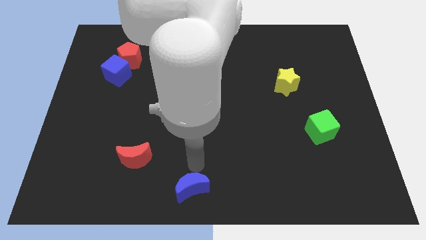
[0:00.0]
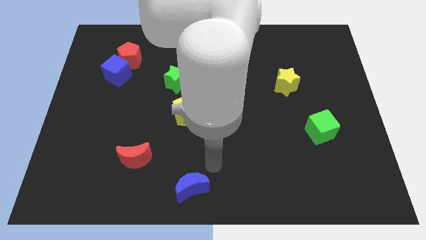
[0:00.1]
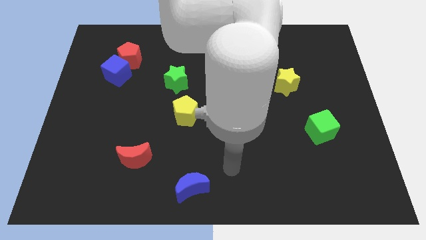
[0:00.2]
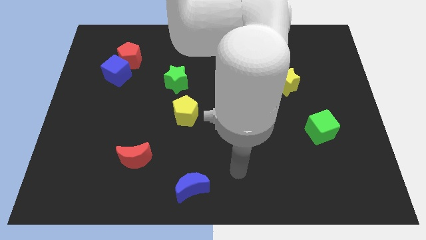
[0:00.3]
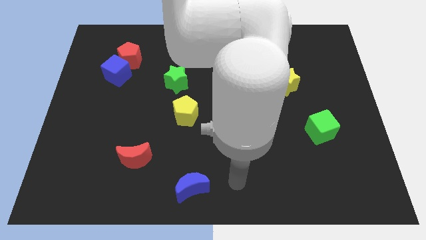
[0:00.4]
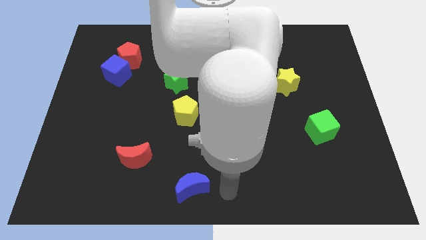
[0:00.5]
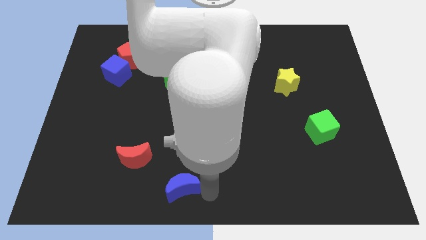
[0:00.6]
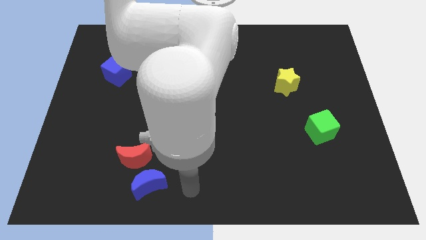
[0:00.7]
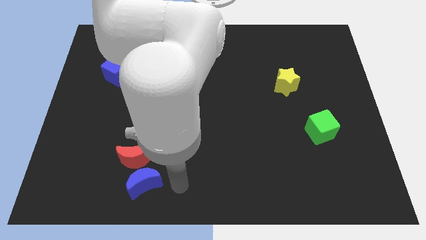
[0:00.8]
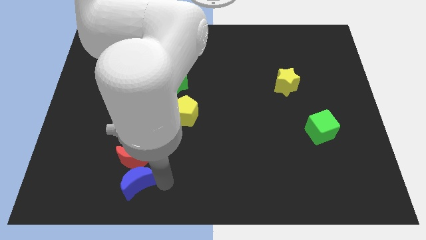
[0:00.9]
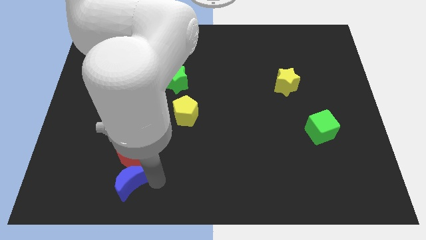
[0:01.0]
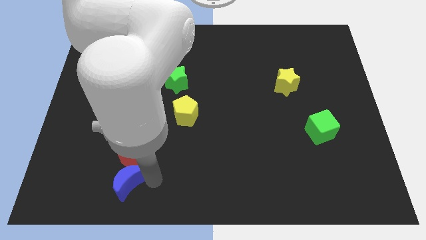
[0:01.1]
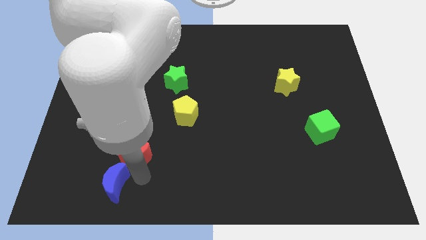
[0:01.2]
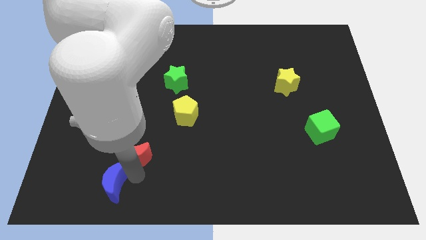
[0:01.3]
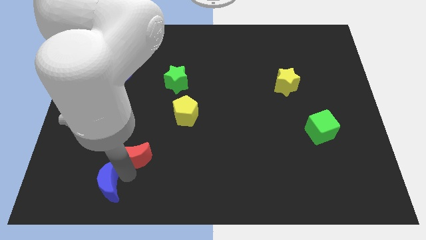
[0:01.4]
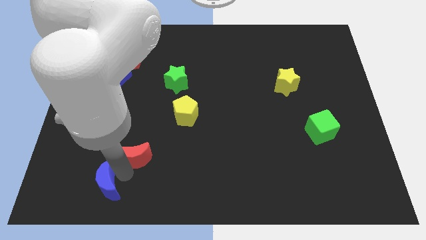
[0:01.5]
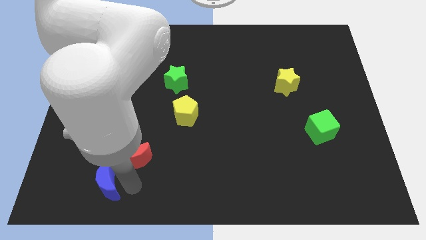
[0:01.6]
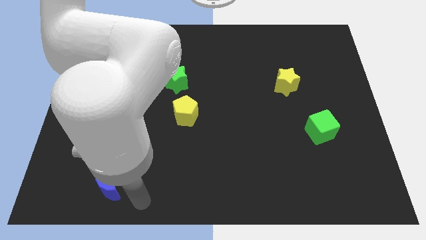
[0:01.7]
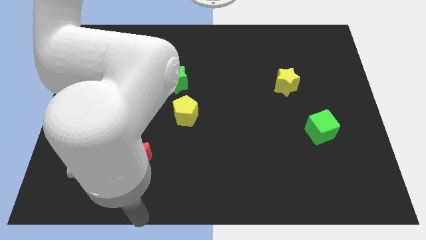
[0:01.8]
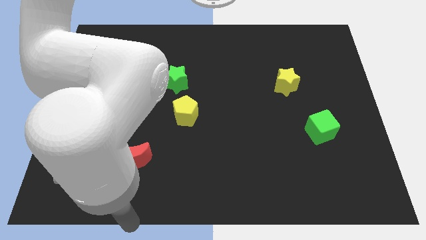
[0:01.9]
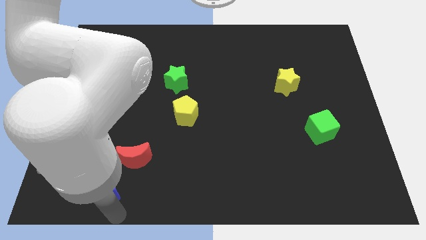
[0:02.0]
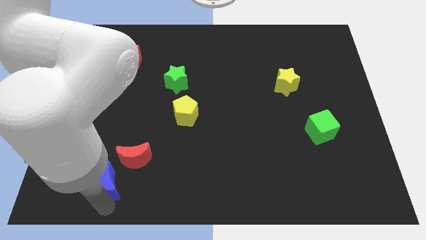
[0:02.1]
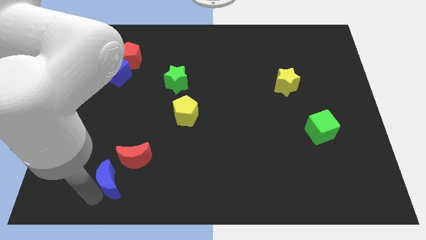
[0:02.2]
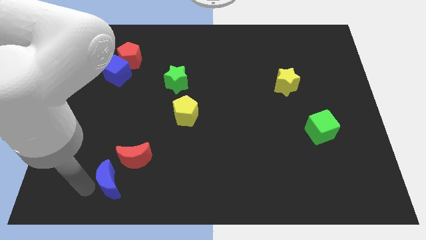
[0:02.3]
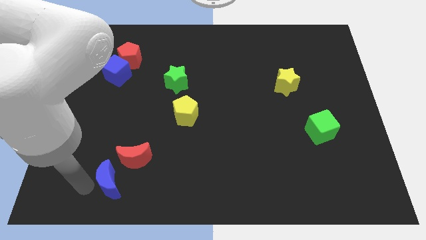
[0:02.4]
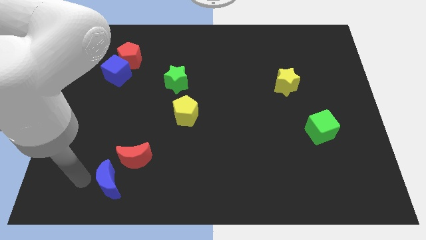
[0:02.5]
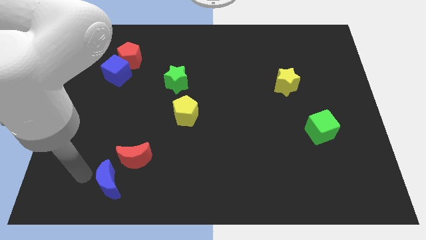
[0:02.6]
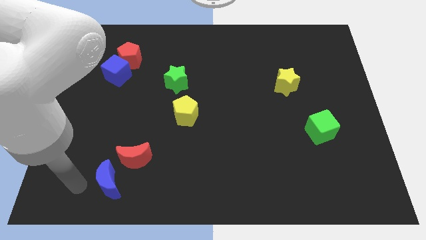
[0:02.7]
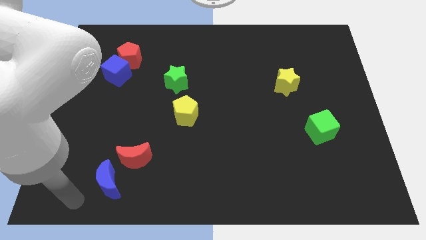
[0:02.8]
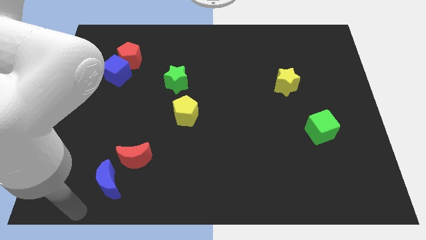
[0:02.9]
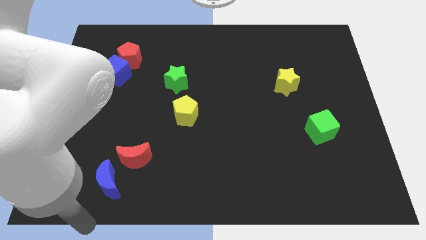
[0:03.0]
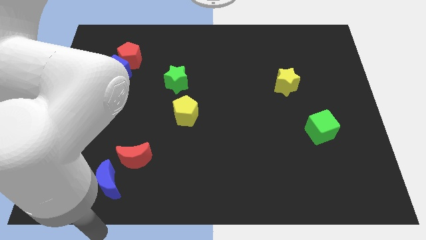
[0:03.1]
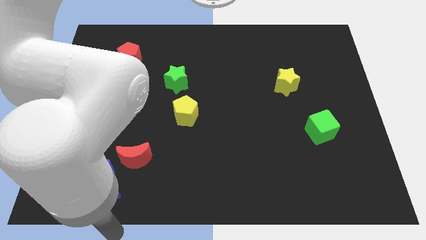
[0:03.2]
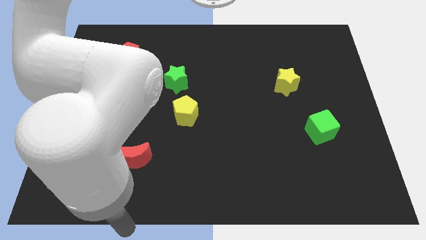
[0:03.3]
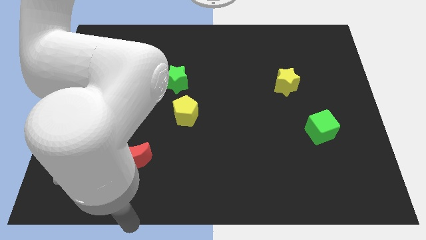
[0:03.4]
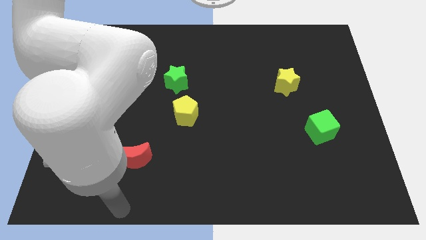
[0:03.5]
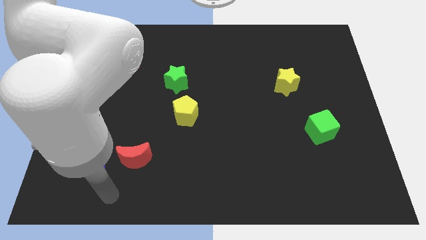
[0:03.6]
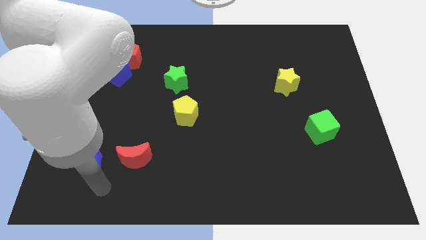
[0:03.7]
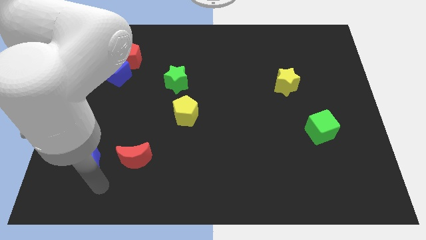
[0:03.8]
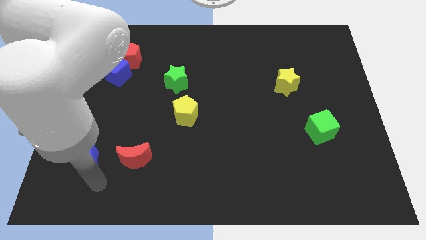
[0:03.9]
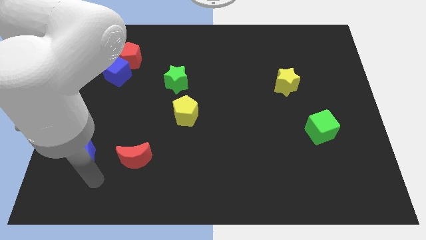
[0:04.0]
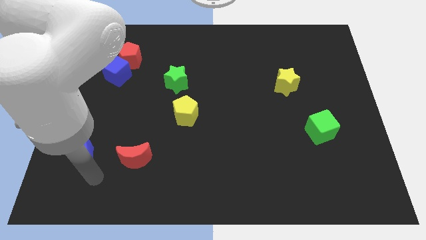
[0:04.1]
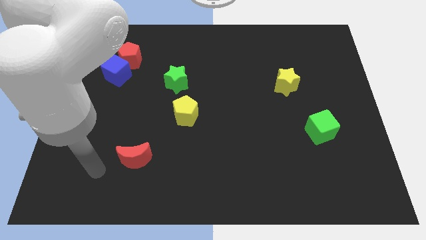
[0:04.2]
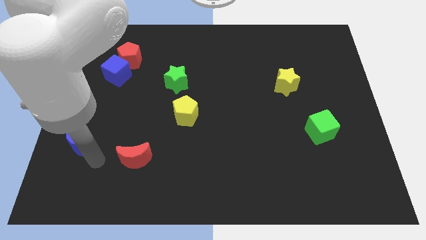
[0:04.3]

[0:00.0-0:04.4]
place blue moon to the left of the red moon

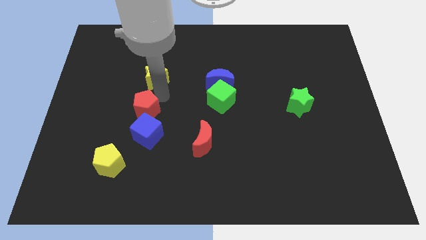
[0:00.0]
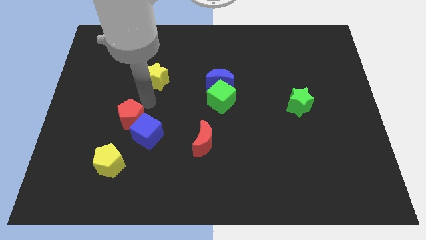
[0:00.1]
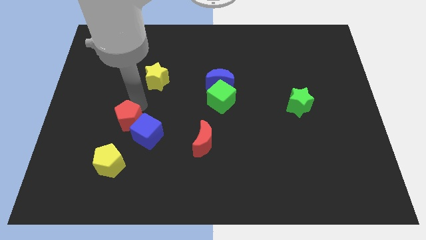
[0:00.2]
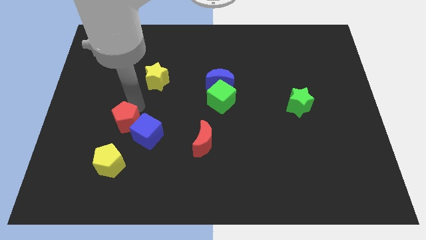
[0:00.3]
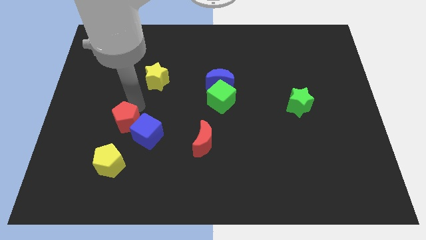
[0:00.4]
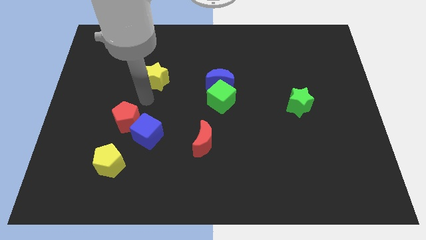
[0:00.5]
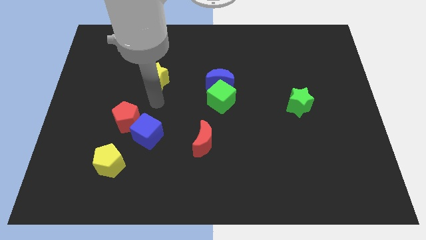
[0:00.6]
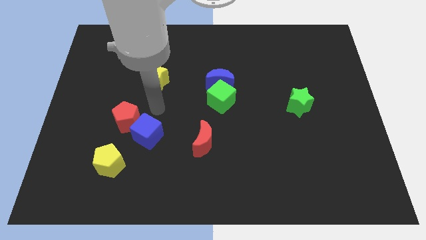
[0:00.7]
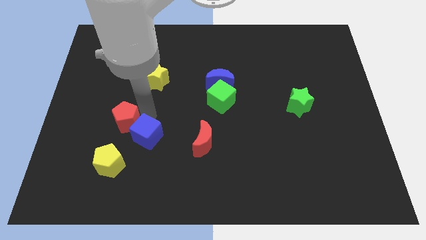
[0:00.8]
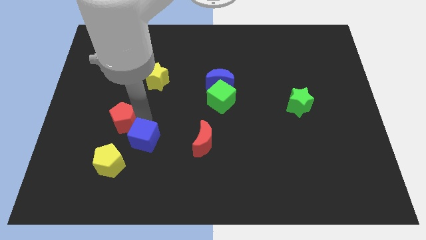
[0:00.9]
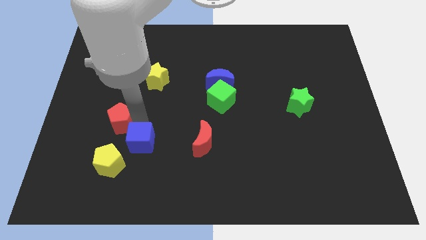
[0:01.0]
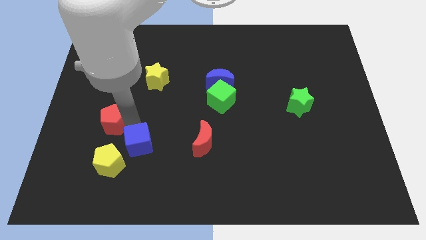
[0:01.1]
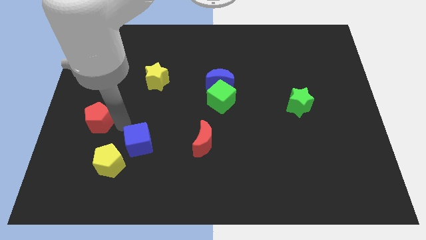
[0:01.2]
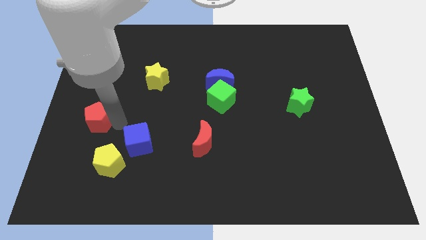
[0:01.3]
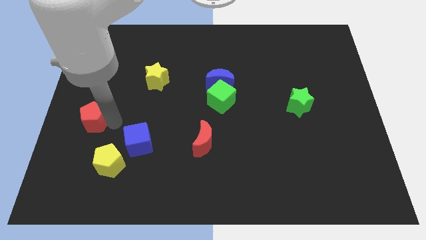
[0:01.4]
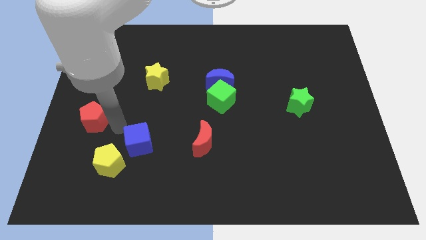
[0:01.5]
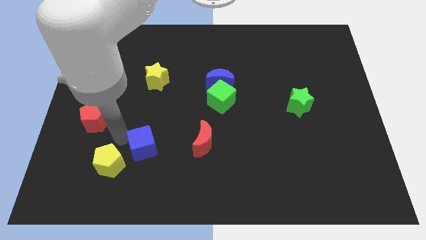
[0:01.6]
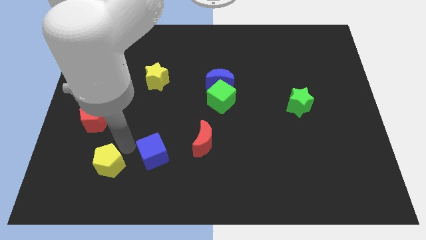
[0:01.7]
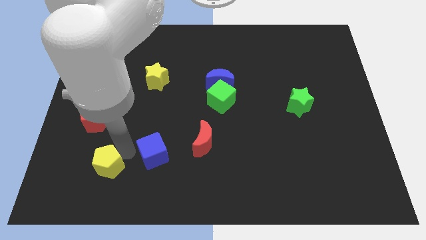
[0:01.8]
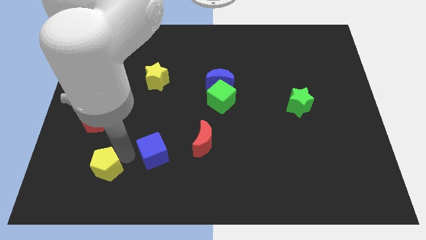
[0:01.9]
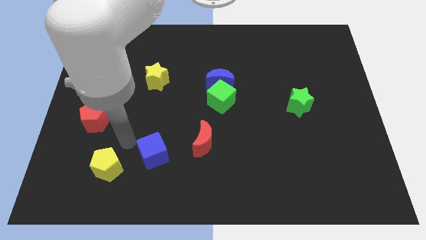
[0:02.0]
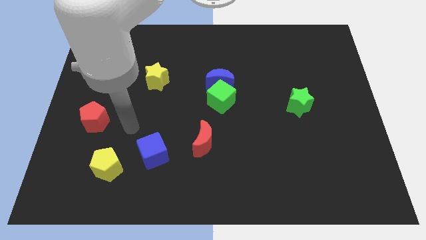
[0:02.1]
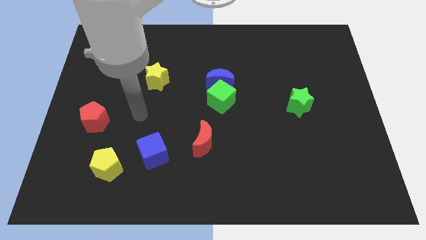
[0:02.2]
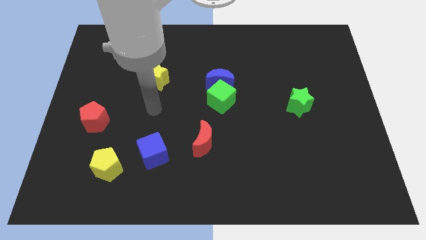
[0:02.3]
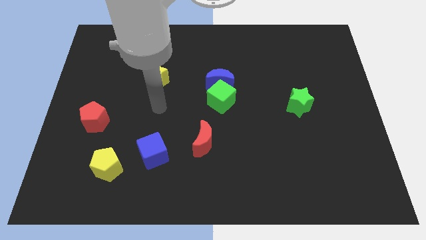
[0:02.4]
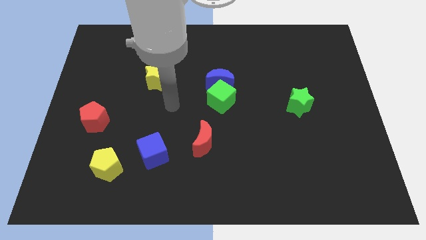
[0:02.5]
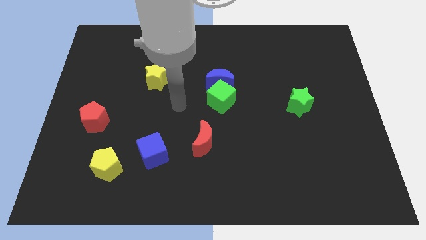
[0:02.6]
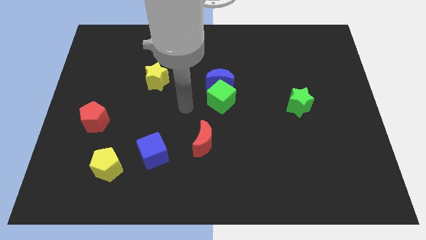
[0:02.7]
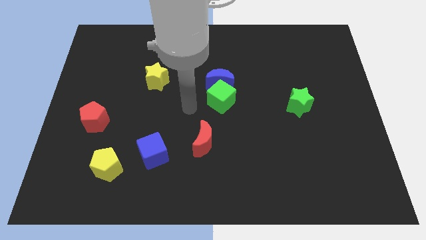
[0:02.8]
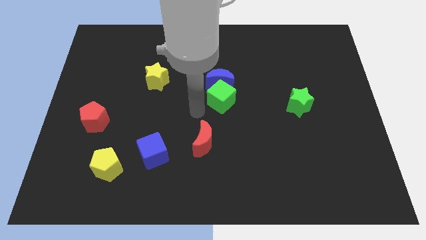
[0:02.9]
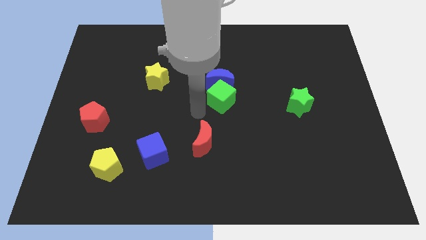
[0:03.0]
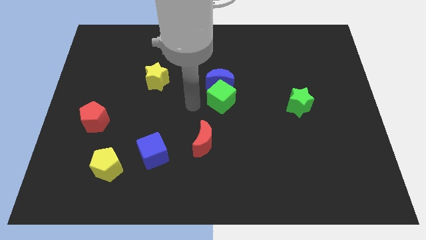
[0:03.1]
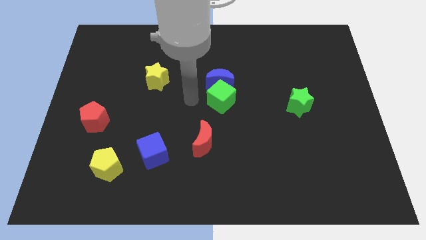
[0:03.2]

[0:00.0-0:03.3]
form a triangle with the red pentagon blue cube yellow pentagon

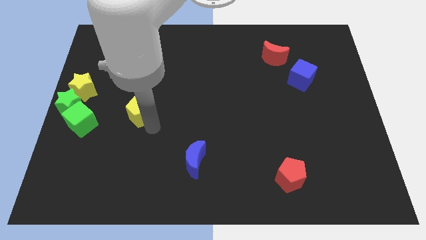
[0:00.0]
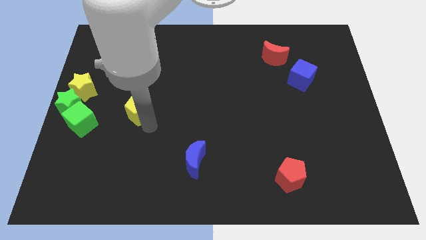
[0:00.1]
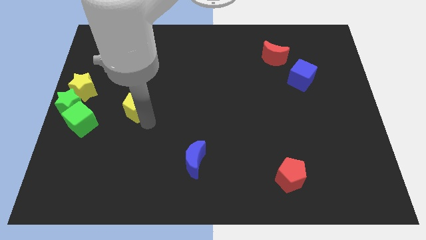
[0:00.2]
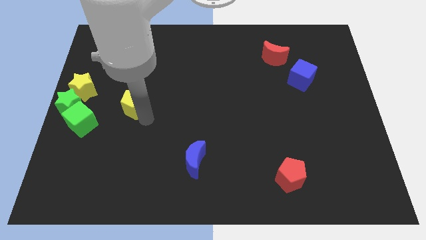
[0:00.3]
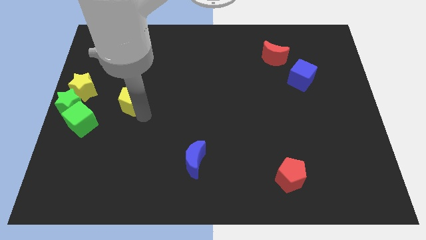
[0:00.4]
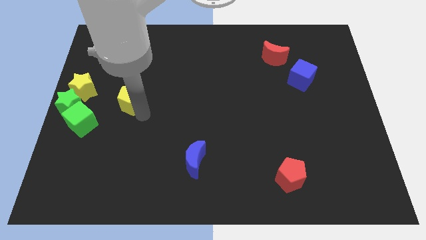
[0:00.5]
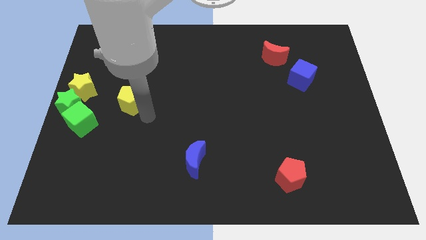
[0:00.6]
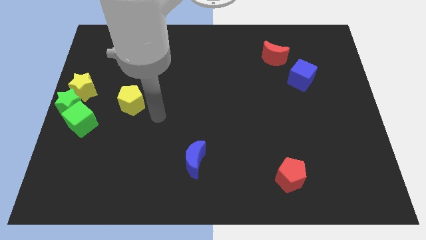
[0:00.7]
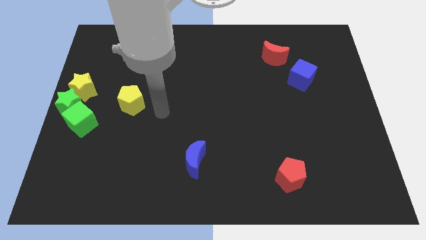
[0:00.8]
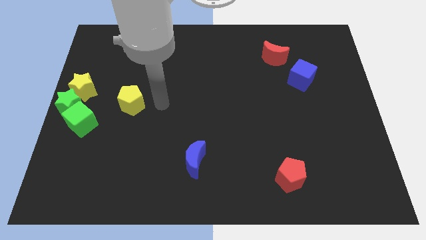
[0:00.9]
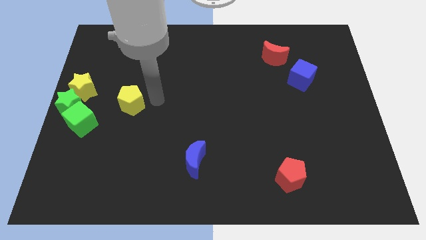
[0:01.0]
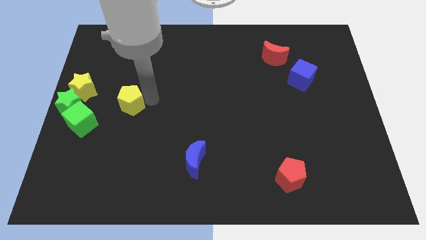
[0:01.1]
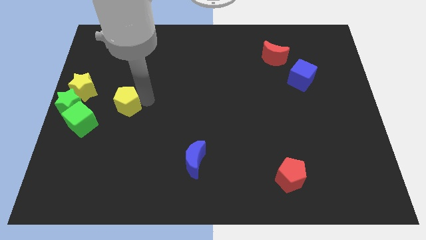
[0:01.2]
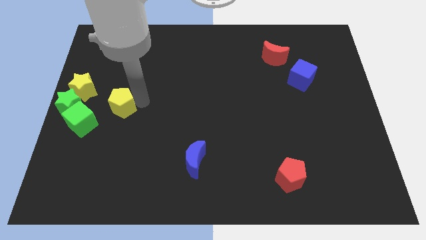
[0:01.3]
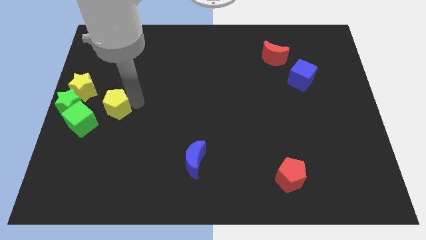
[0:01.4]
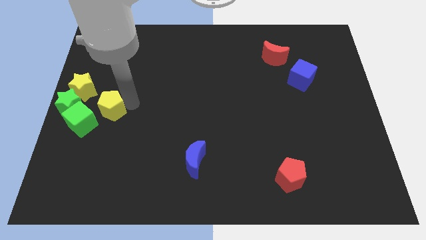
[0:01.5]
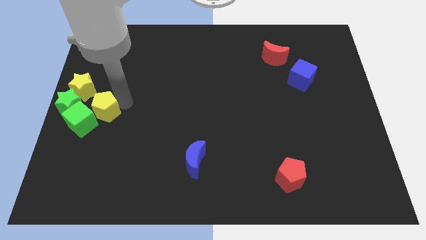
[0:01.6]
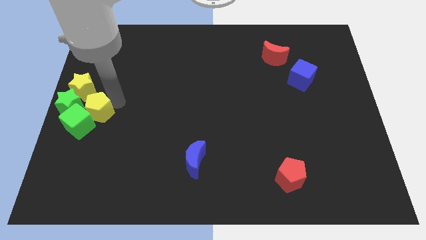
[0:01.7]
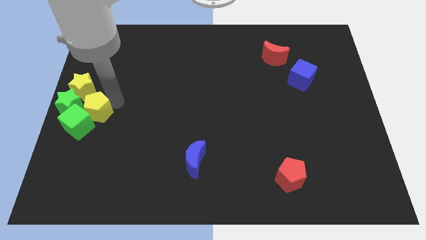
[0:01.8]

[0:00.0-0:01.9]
push the yellow pentagon into green cube
